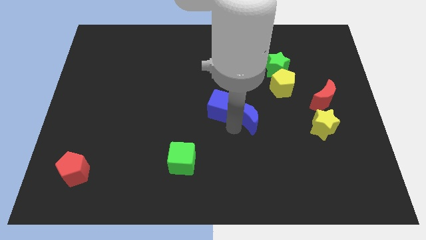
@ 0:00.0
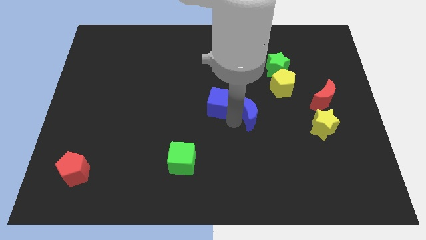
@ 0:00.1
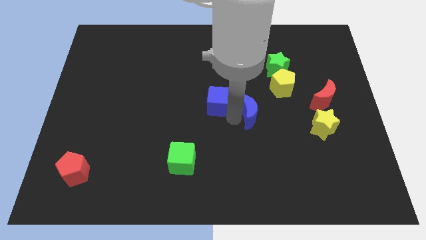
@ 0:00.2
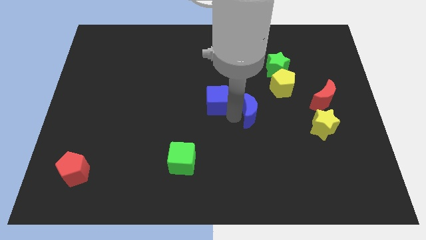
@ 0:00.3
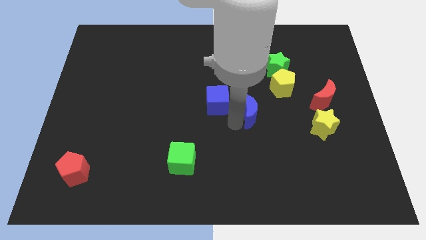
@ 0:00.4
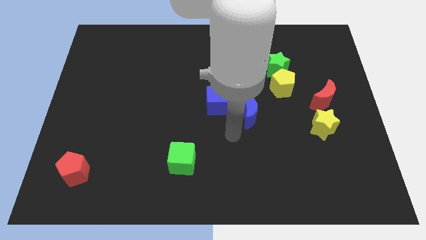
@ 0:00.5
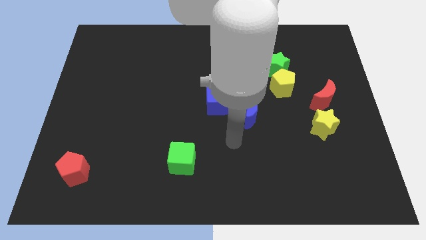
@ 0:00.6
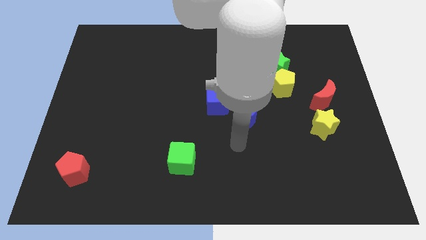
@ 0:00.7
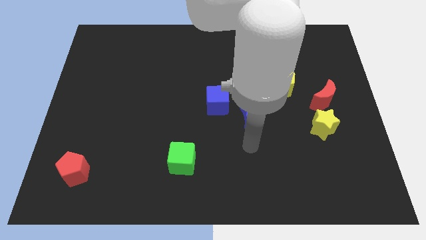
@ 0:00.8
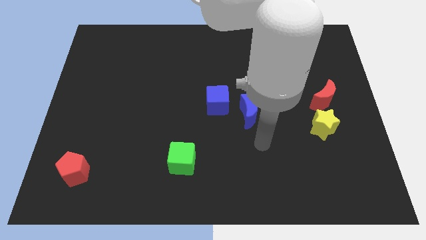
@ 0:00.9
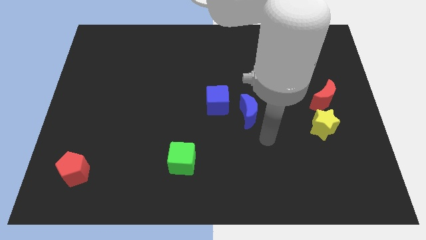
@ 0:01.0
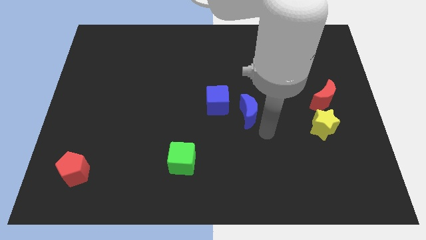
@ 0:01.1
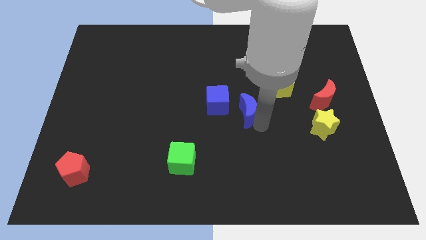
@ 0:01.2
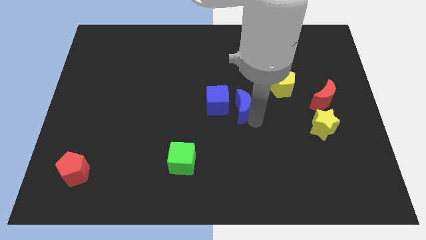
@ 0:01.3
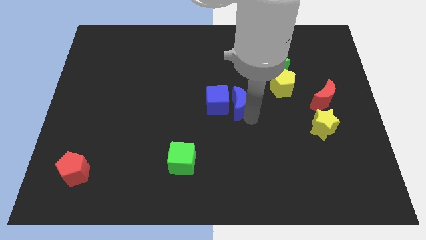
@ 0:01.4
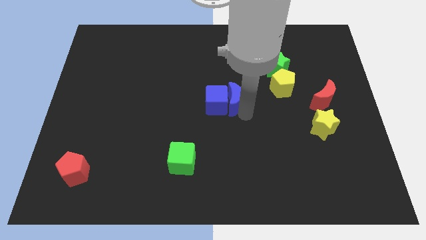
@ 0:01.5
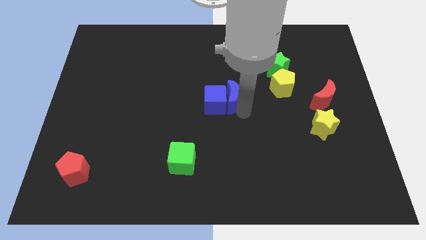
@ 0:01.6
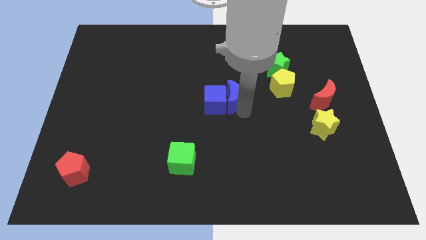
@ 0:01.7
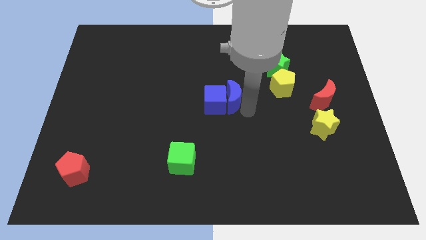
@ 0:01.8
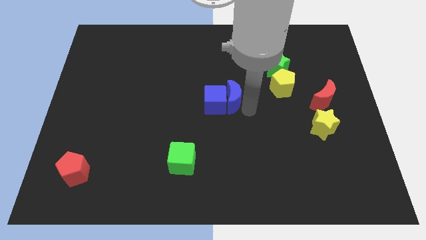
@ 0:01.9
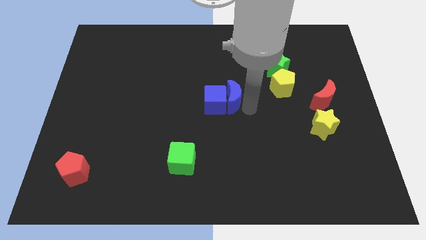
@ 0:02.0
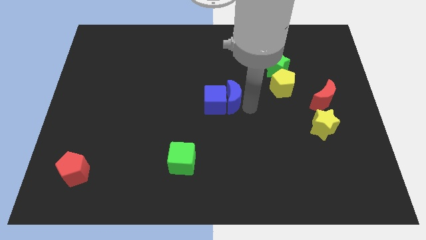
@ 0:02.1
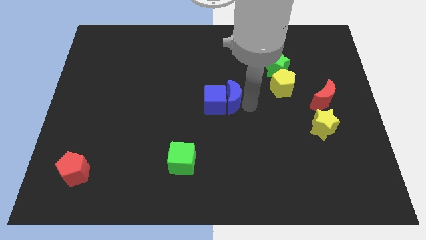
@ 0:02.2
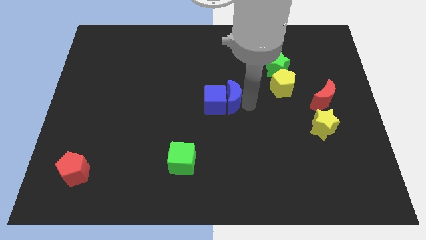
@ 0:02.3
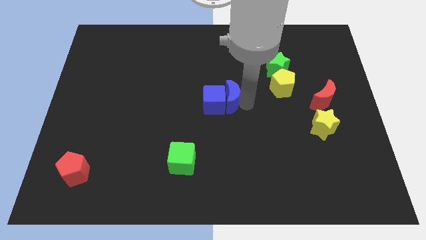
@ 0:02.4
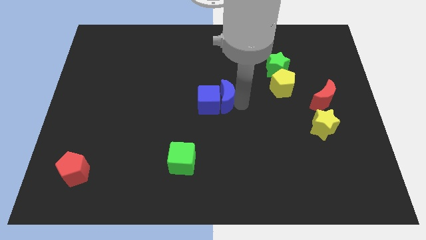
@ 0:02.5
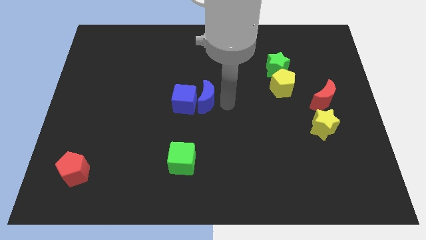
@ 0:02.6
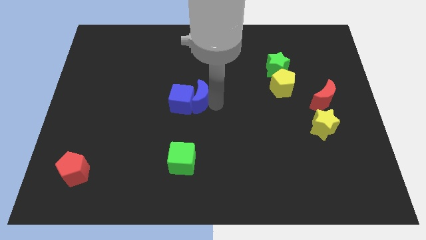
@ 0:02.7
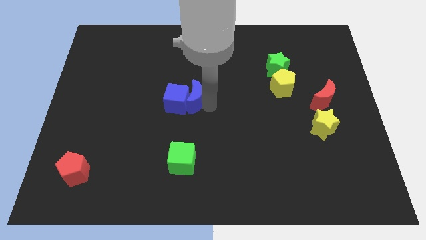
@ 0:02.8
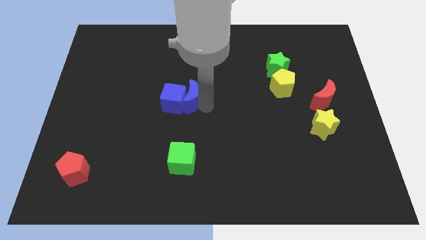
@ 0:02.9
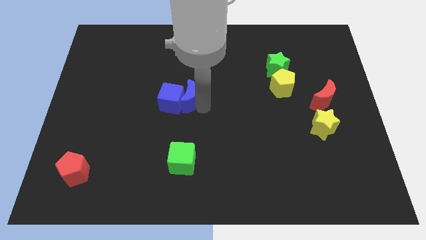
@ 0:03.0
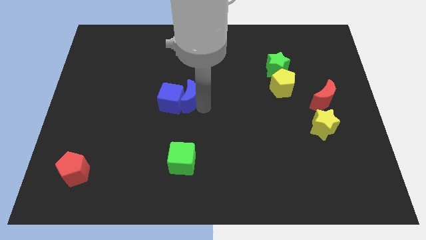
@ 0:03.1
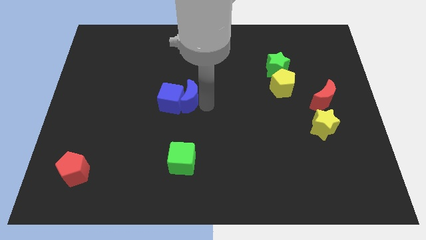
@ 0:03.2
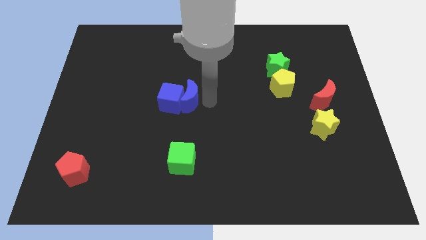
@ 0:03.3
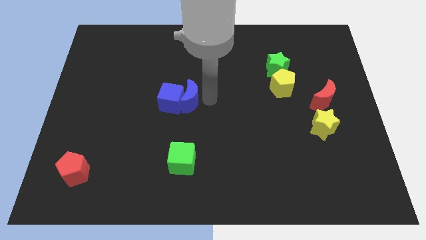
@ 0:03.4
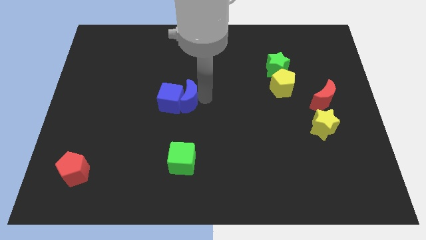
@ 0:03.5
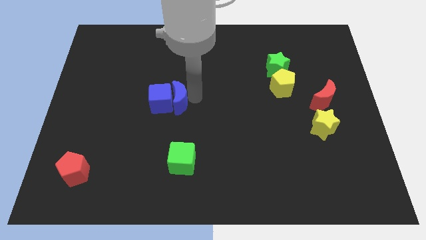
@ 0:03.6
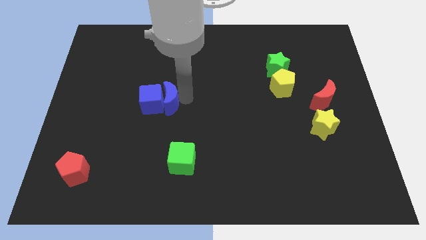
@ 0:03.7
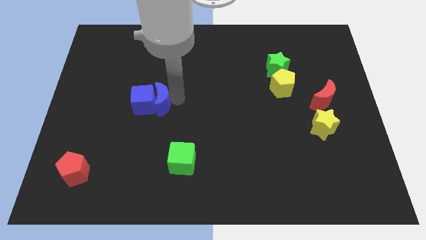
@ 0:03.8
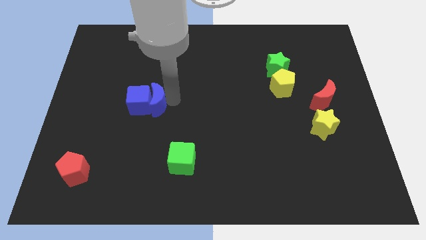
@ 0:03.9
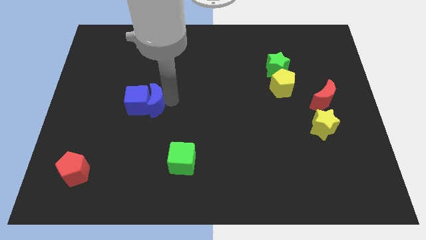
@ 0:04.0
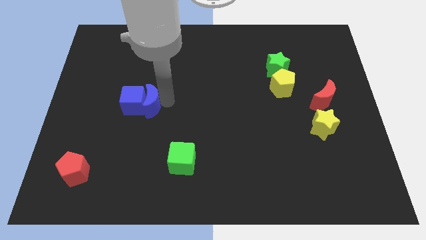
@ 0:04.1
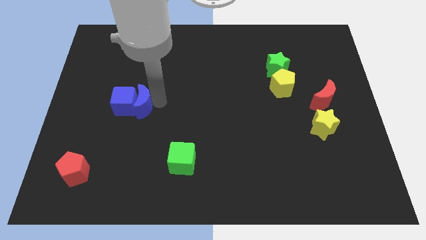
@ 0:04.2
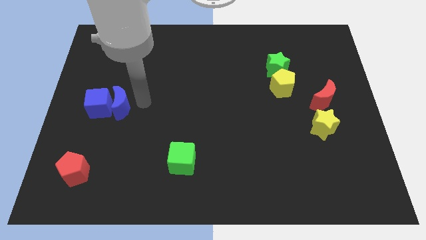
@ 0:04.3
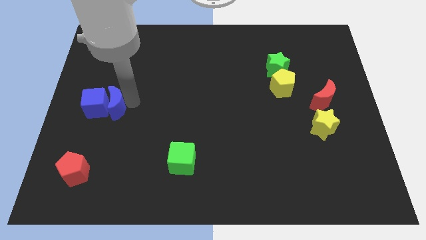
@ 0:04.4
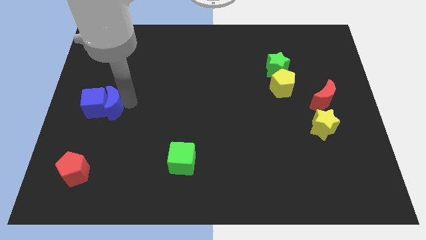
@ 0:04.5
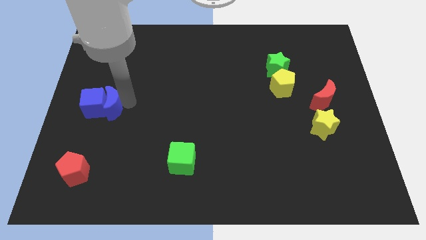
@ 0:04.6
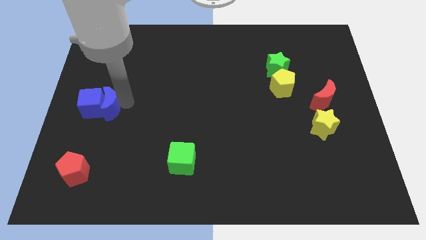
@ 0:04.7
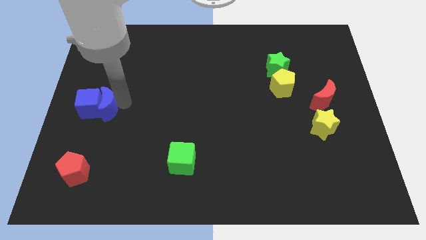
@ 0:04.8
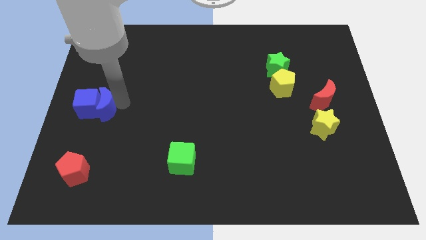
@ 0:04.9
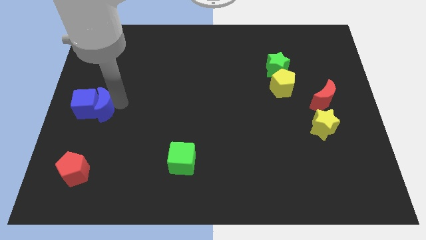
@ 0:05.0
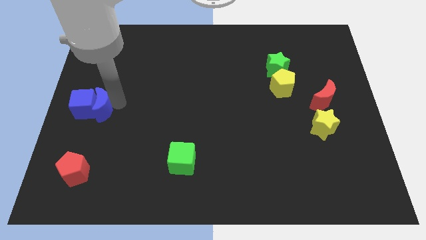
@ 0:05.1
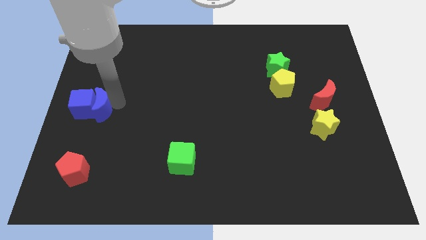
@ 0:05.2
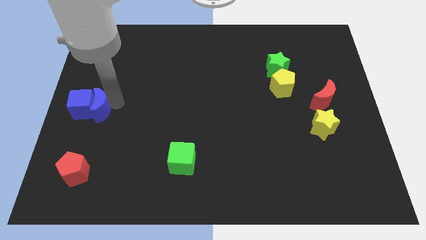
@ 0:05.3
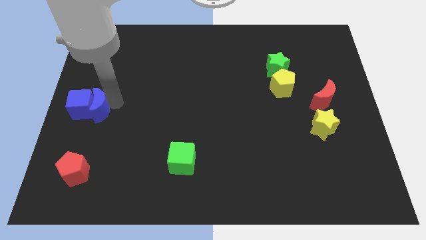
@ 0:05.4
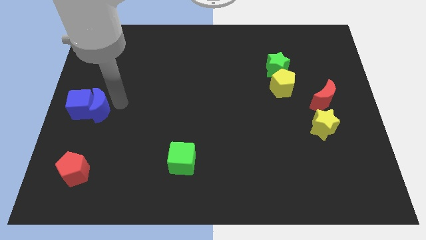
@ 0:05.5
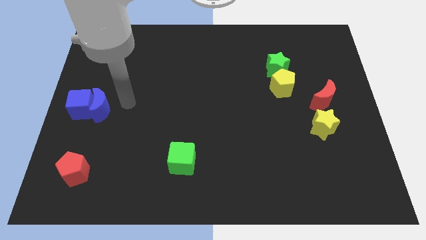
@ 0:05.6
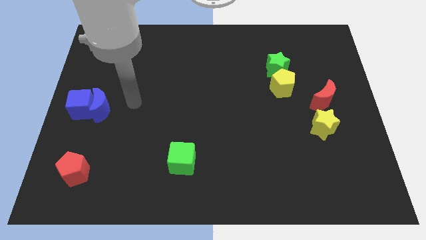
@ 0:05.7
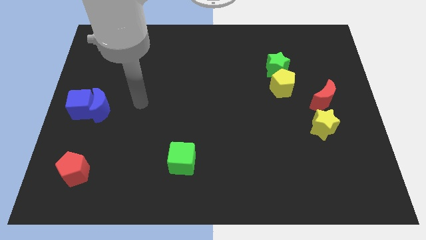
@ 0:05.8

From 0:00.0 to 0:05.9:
place the blue blocks together at the center left side of the board

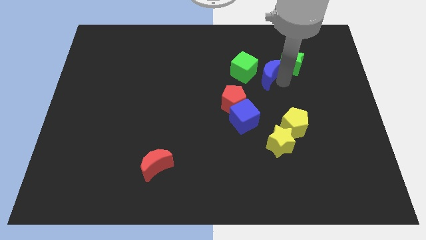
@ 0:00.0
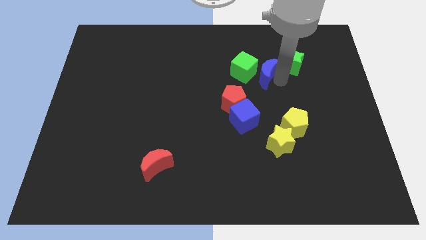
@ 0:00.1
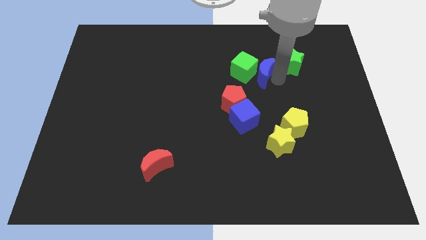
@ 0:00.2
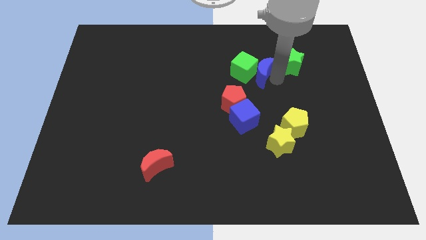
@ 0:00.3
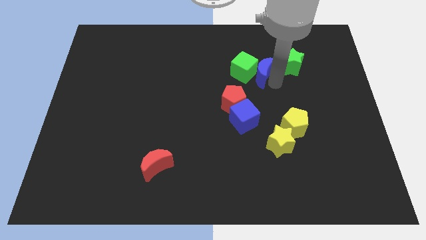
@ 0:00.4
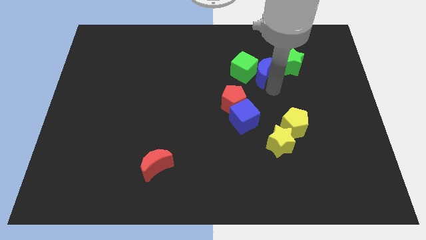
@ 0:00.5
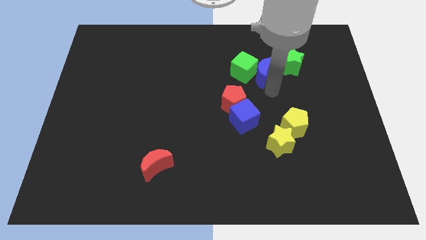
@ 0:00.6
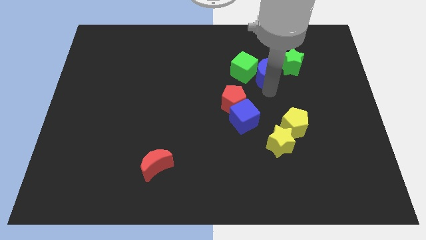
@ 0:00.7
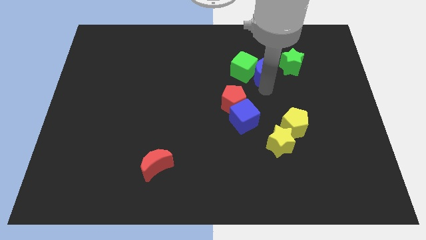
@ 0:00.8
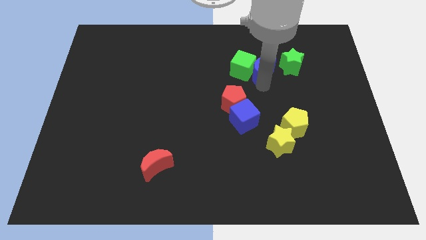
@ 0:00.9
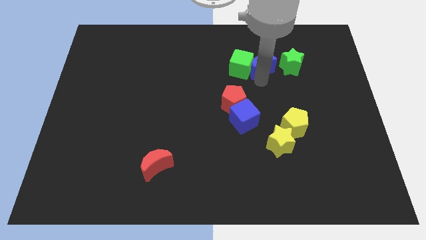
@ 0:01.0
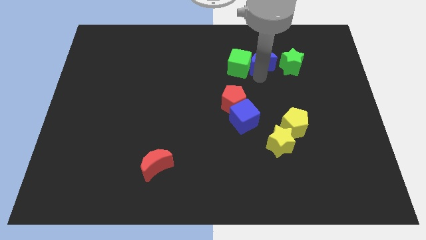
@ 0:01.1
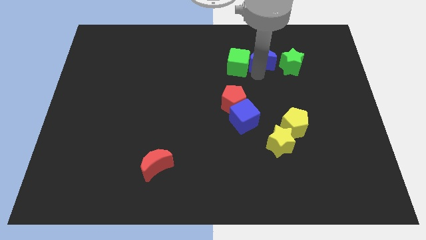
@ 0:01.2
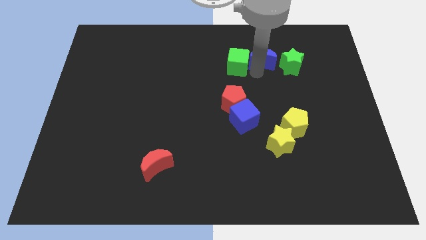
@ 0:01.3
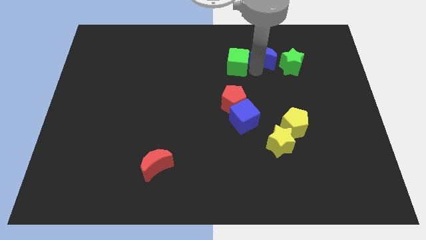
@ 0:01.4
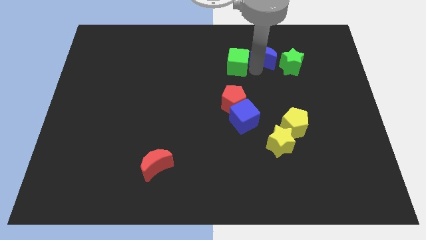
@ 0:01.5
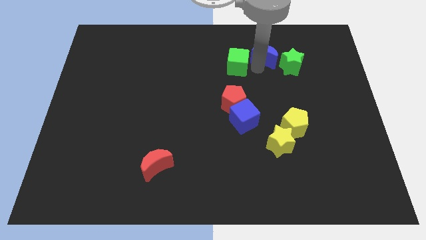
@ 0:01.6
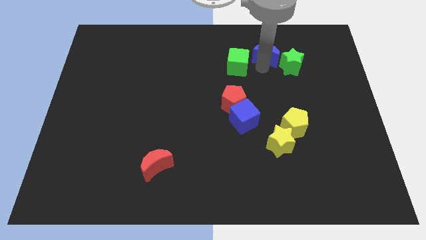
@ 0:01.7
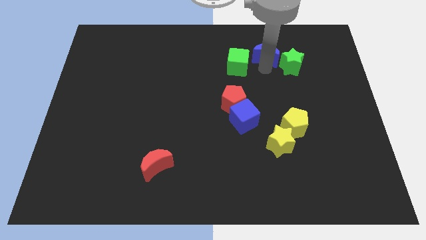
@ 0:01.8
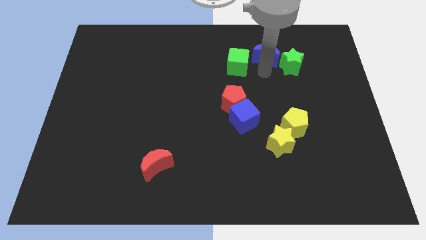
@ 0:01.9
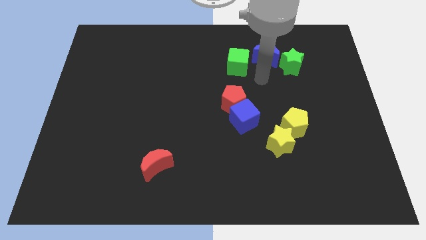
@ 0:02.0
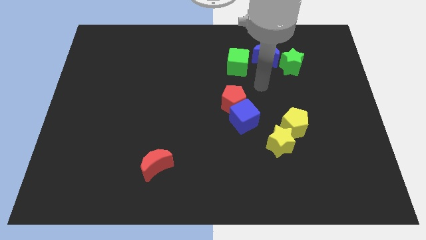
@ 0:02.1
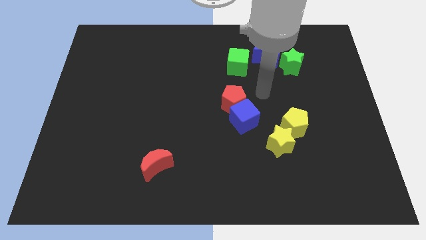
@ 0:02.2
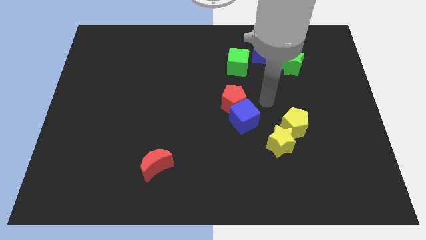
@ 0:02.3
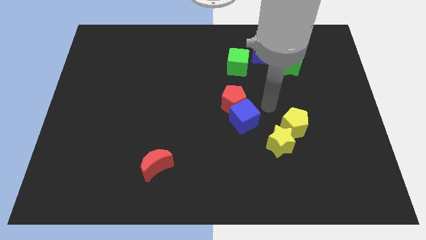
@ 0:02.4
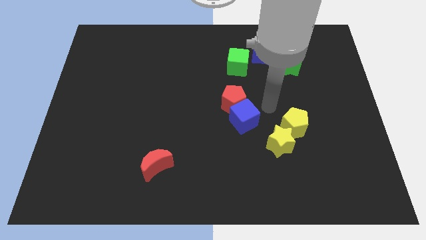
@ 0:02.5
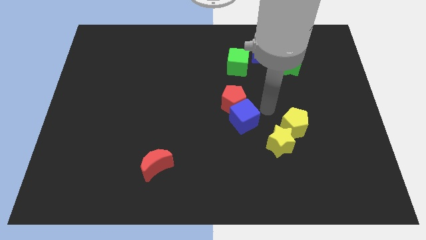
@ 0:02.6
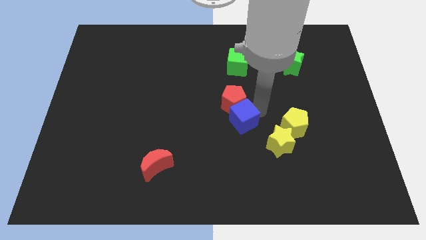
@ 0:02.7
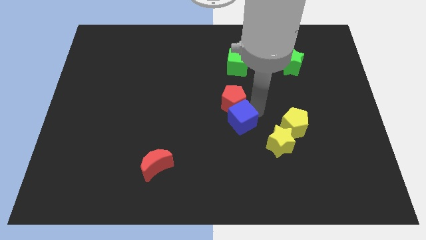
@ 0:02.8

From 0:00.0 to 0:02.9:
place blue crescent near green cube

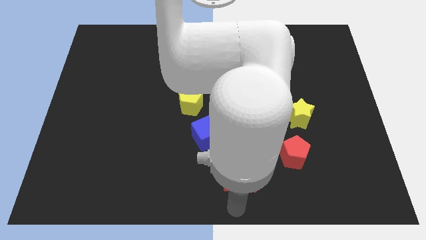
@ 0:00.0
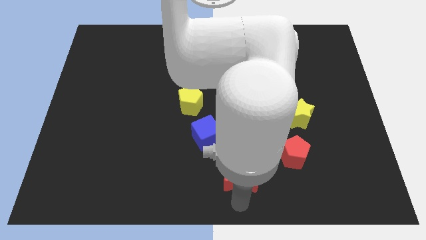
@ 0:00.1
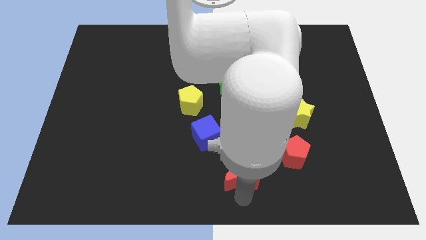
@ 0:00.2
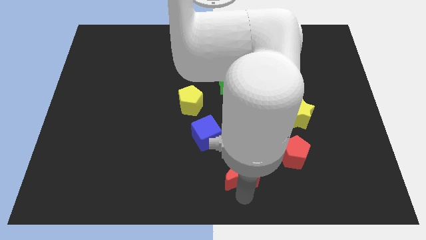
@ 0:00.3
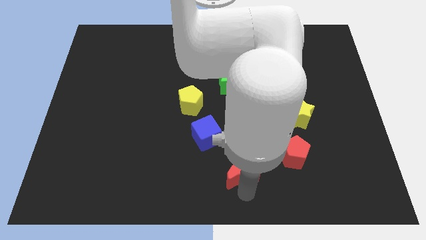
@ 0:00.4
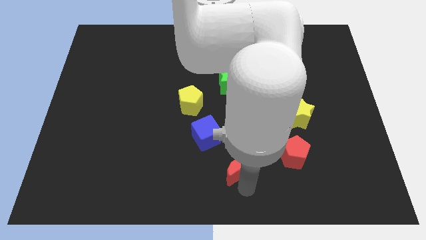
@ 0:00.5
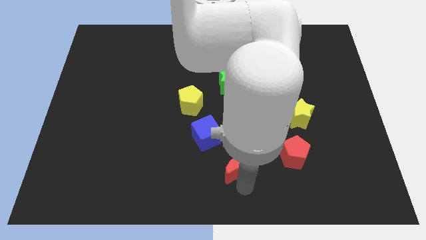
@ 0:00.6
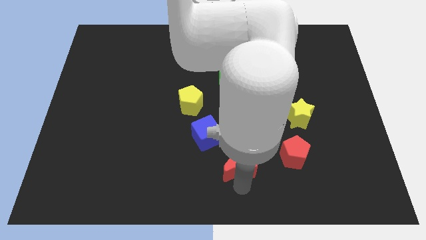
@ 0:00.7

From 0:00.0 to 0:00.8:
push the red moon towards up
